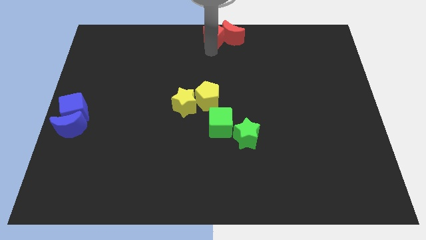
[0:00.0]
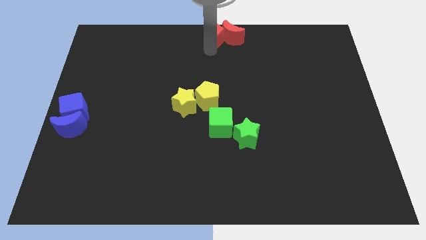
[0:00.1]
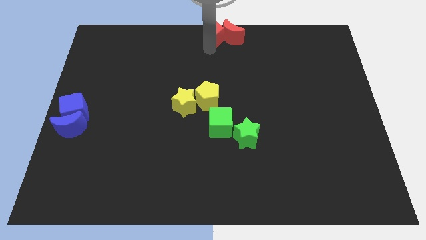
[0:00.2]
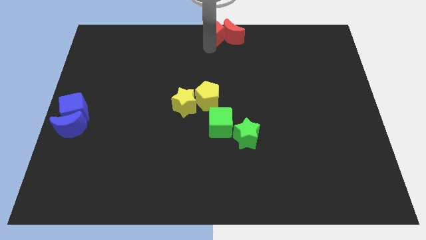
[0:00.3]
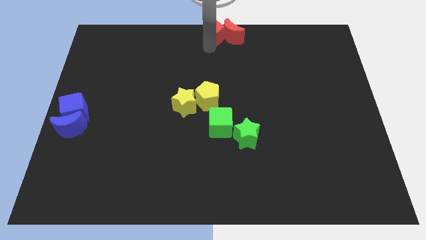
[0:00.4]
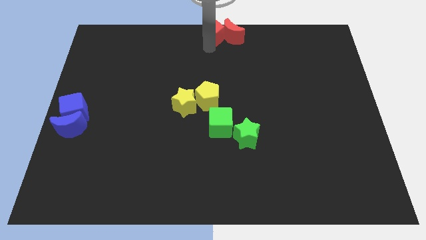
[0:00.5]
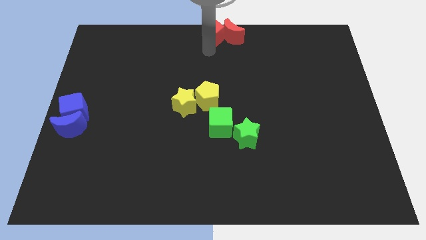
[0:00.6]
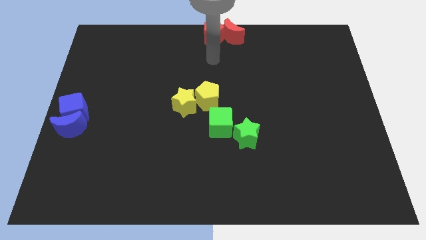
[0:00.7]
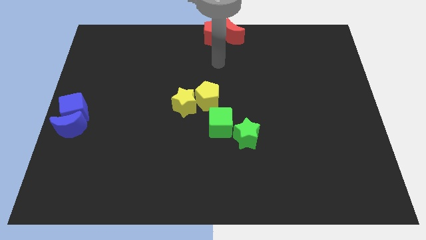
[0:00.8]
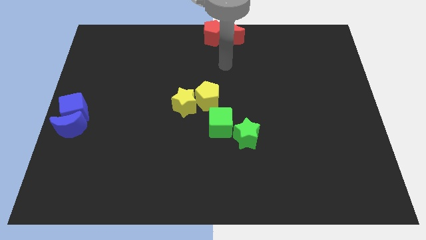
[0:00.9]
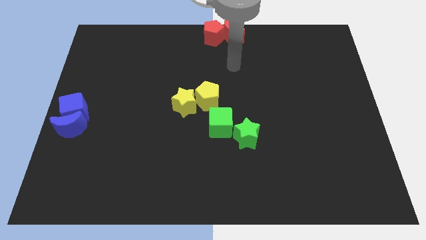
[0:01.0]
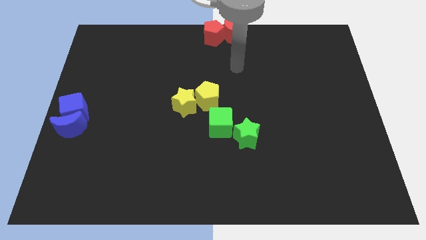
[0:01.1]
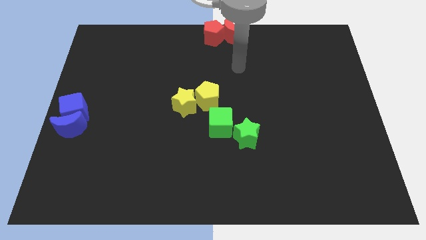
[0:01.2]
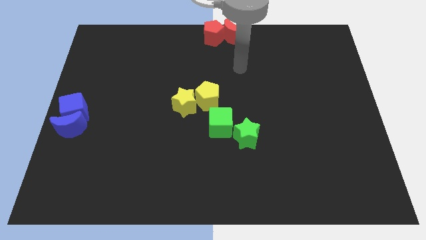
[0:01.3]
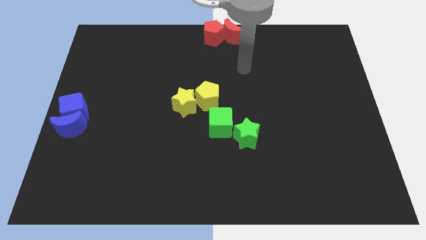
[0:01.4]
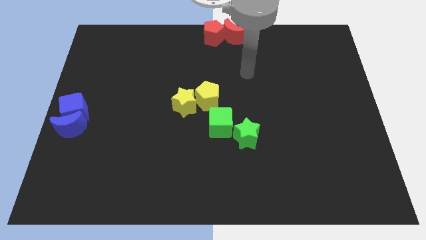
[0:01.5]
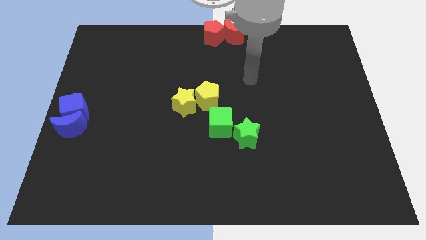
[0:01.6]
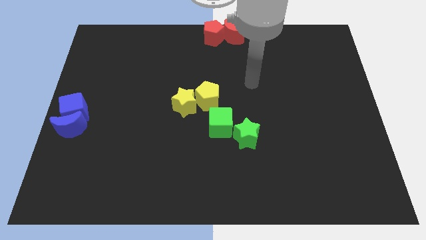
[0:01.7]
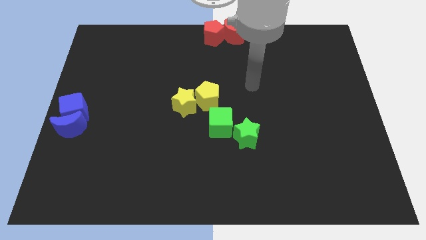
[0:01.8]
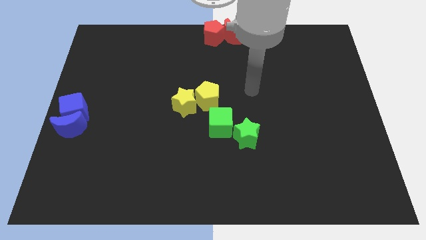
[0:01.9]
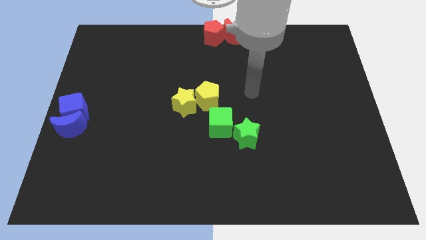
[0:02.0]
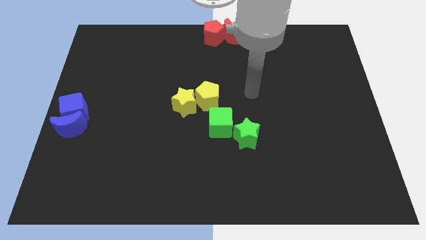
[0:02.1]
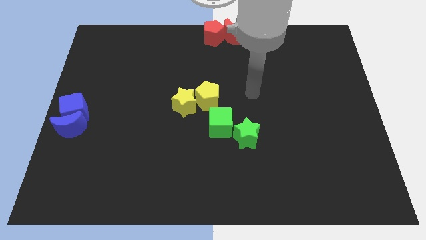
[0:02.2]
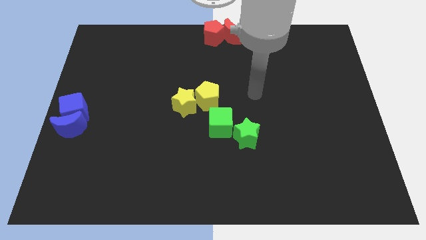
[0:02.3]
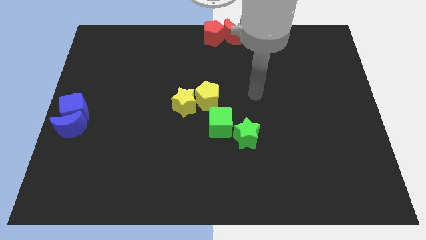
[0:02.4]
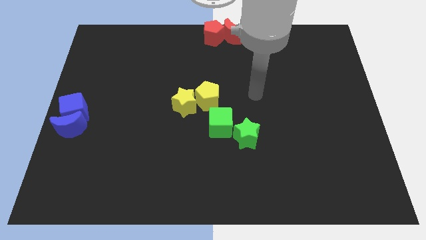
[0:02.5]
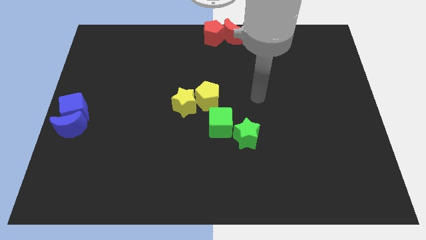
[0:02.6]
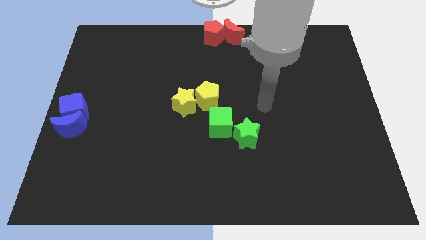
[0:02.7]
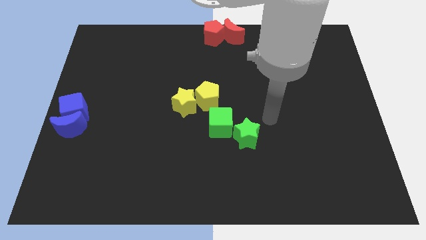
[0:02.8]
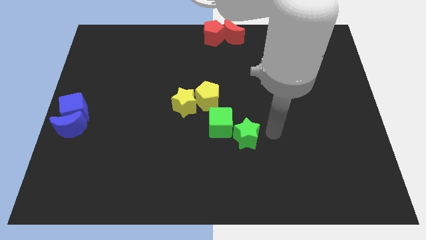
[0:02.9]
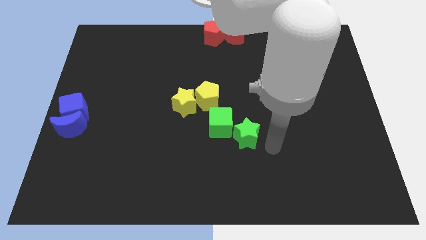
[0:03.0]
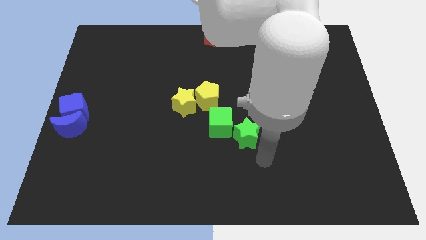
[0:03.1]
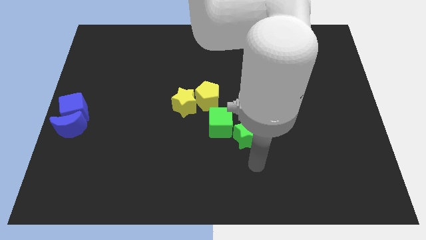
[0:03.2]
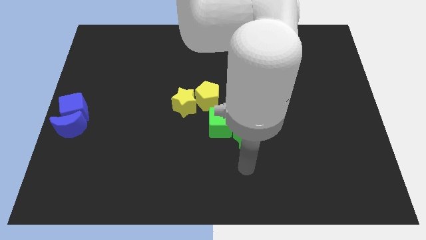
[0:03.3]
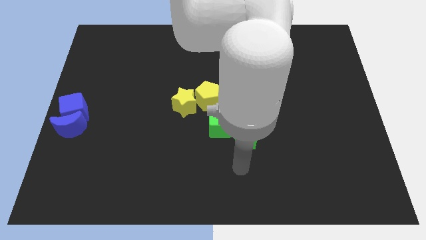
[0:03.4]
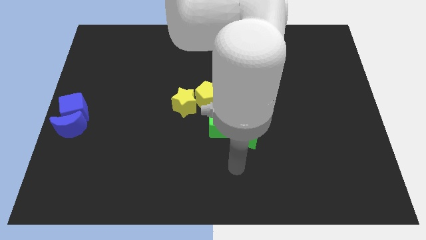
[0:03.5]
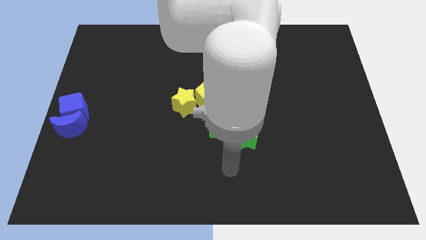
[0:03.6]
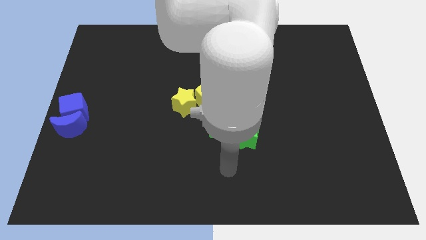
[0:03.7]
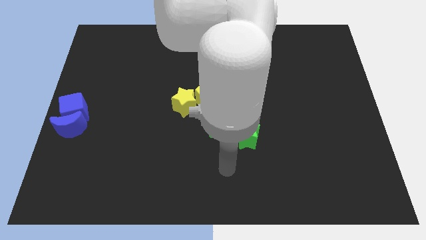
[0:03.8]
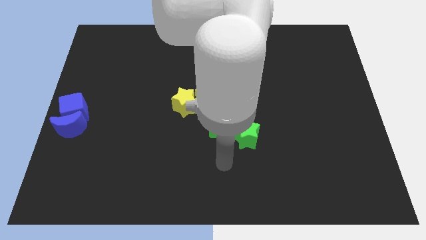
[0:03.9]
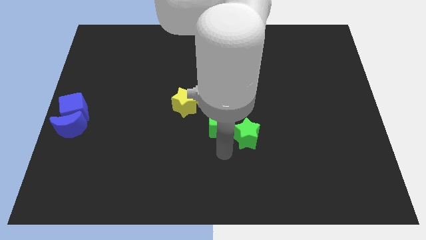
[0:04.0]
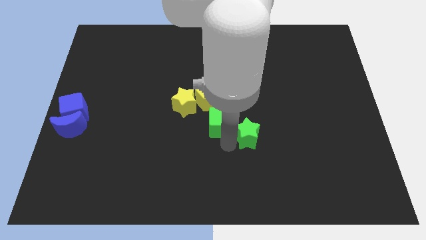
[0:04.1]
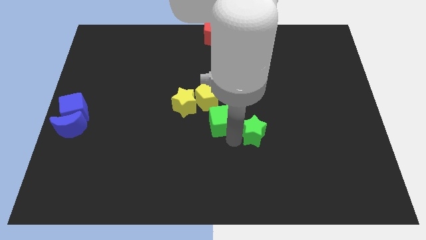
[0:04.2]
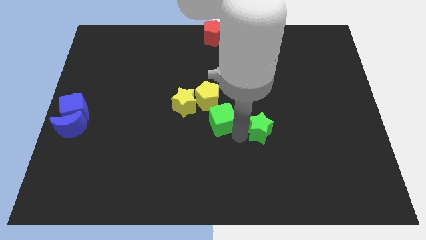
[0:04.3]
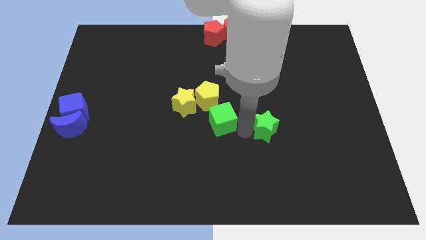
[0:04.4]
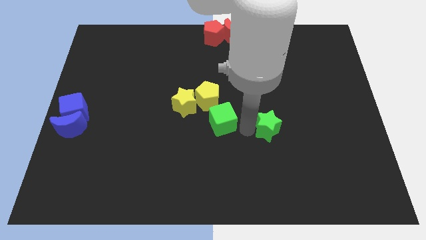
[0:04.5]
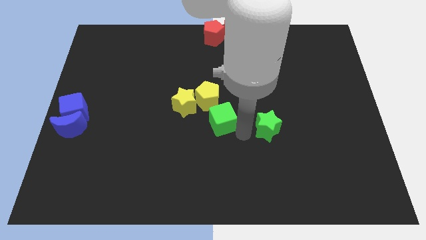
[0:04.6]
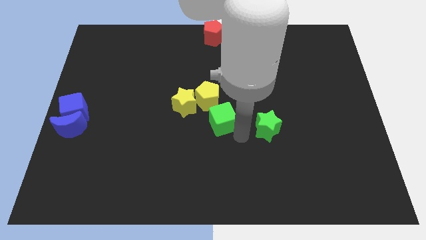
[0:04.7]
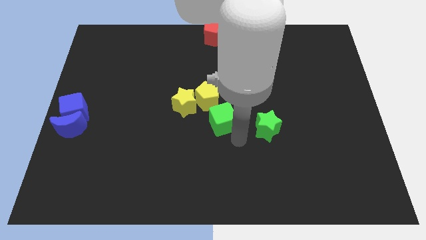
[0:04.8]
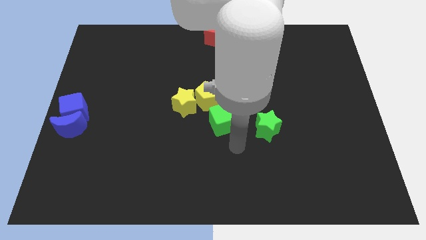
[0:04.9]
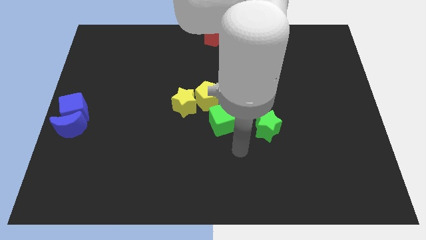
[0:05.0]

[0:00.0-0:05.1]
separate the green star and the green cube

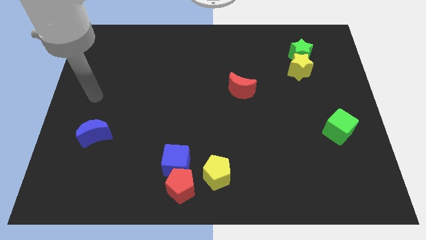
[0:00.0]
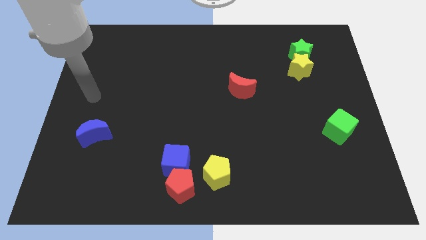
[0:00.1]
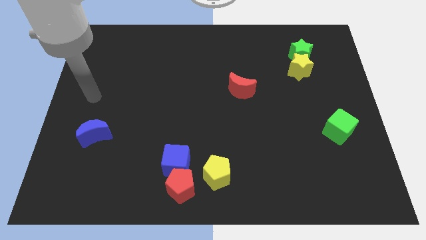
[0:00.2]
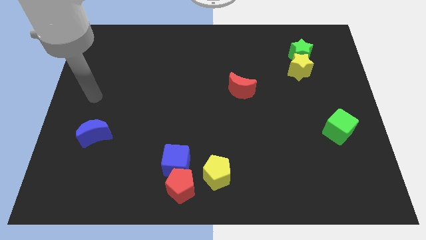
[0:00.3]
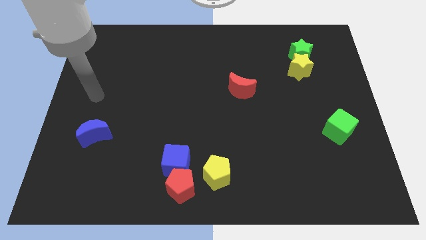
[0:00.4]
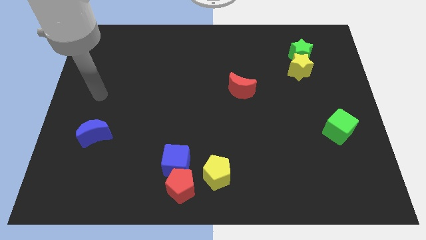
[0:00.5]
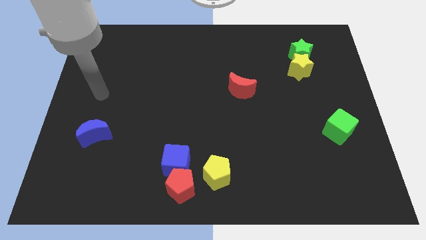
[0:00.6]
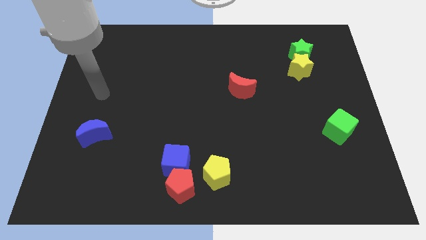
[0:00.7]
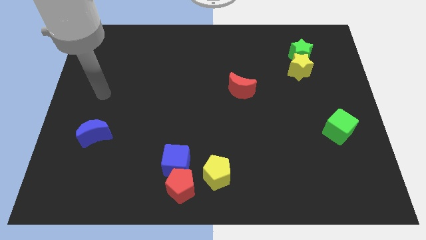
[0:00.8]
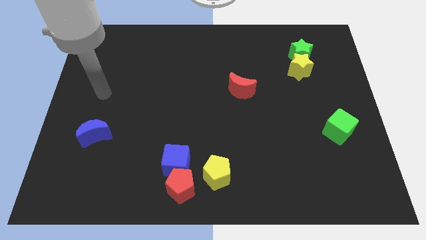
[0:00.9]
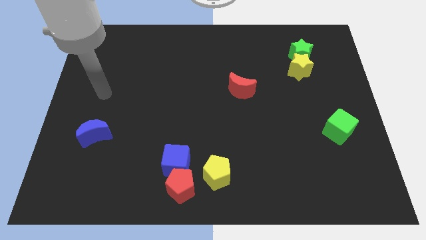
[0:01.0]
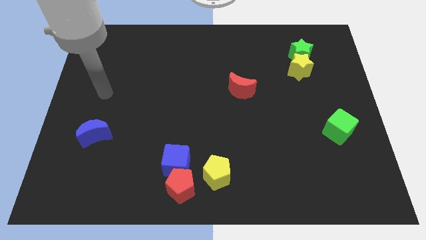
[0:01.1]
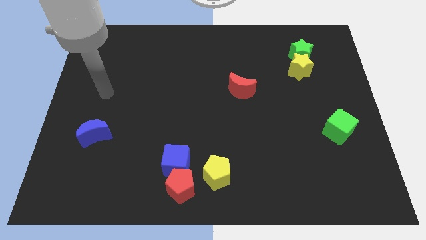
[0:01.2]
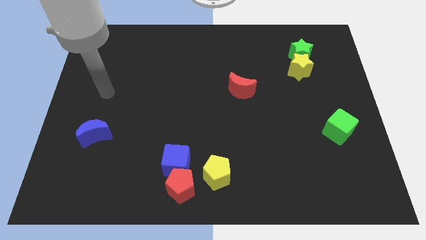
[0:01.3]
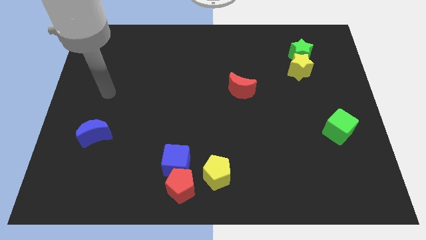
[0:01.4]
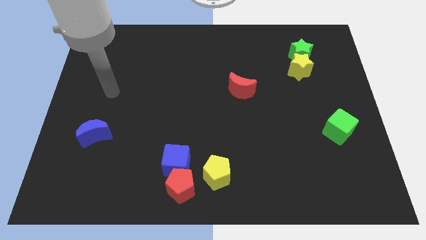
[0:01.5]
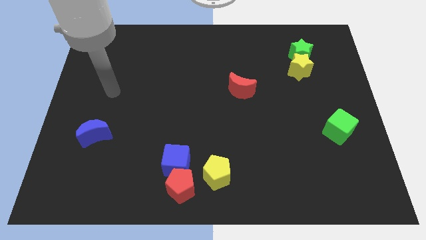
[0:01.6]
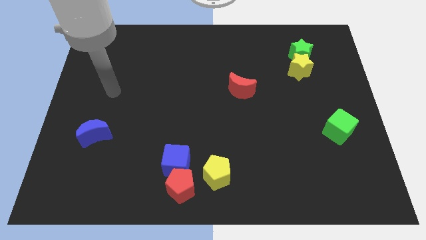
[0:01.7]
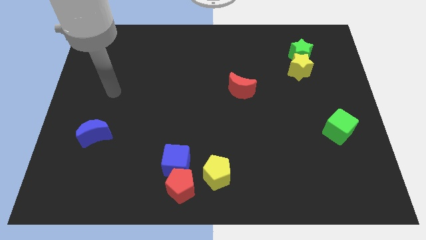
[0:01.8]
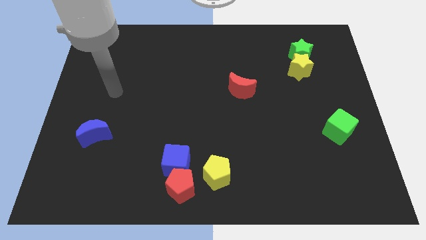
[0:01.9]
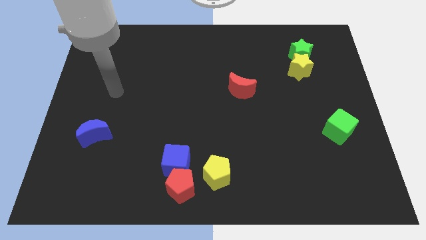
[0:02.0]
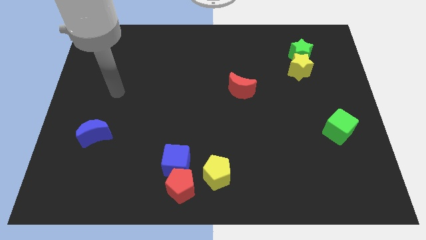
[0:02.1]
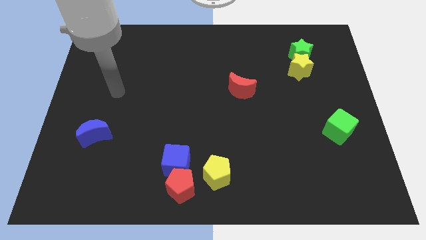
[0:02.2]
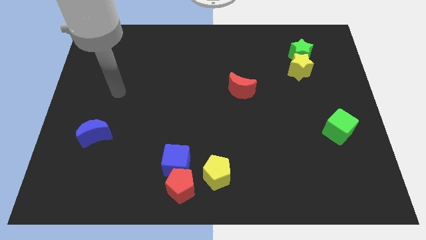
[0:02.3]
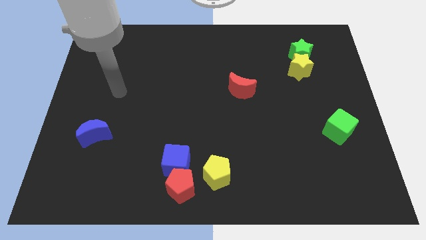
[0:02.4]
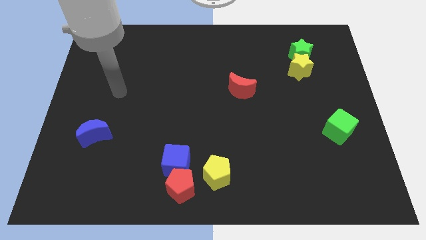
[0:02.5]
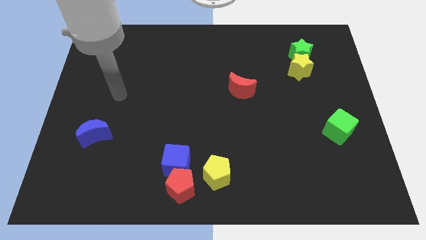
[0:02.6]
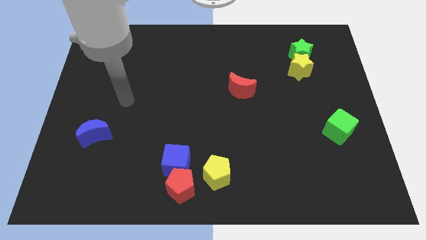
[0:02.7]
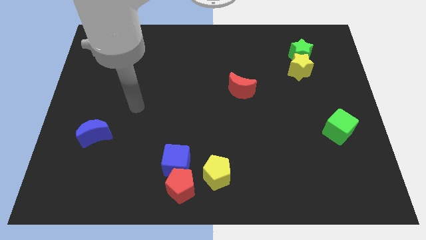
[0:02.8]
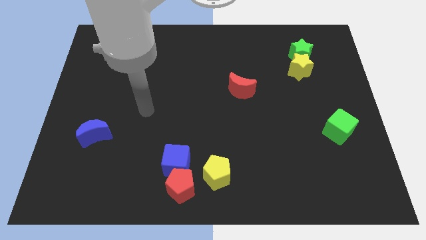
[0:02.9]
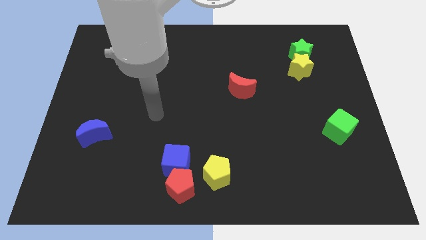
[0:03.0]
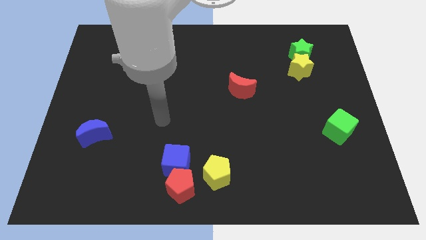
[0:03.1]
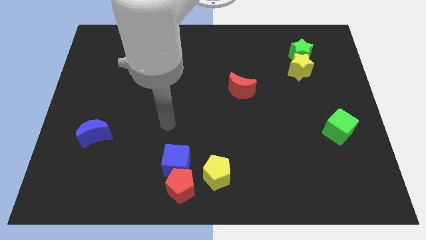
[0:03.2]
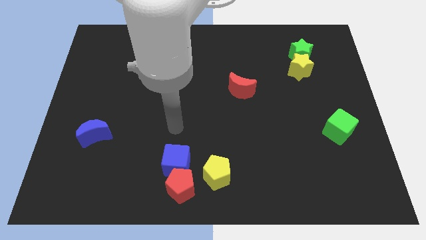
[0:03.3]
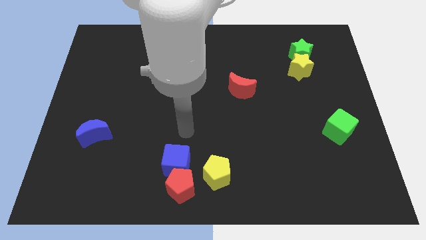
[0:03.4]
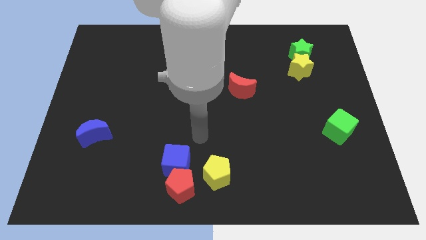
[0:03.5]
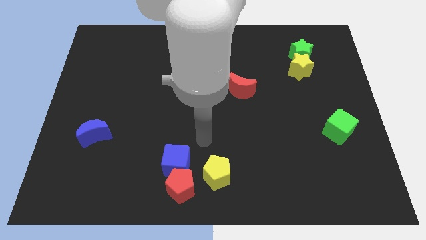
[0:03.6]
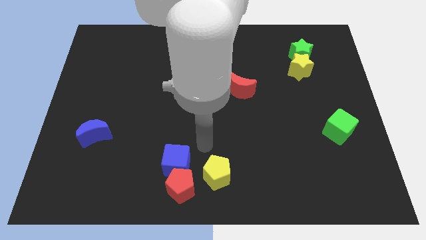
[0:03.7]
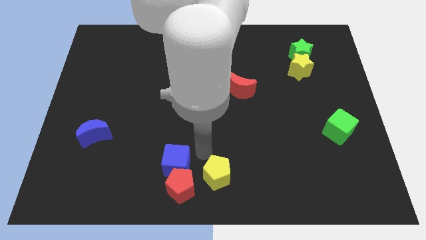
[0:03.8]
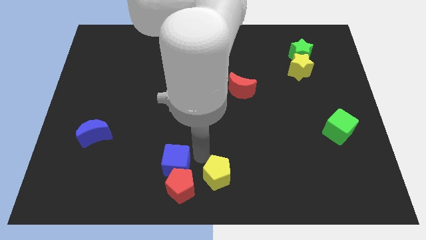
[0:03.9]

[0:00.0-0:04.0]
move your arm in between blue cube and yellow pentagon
